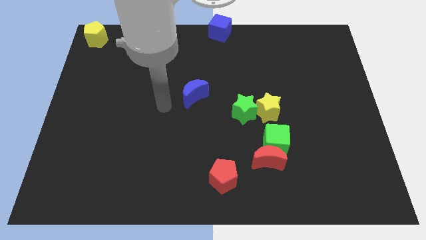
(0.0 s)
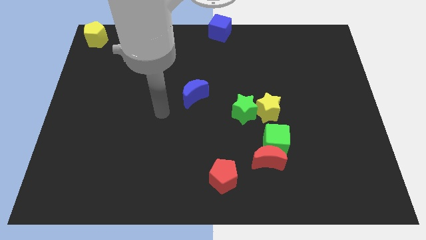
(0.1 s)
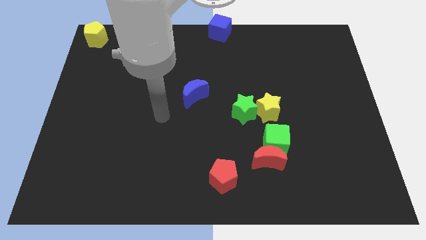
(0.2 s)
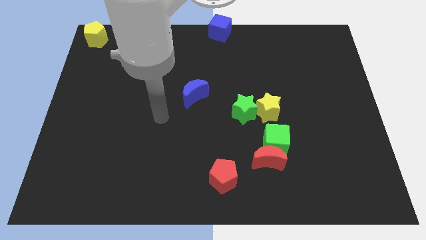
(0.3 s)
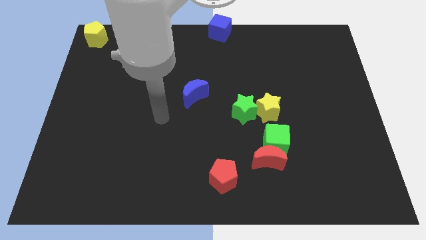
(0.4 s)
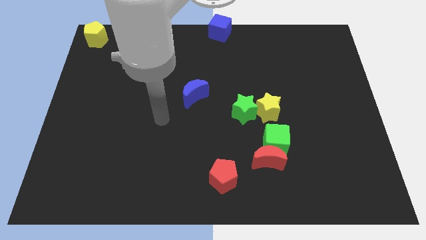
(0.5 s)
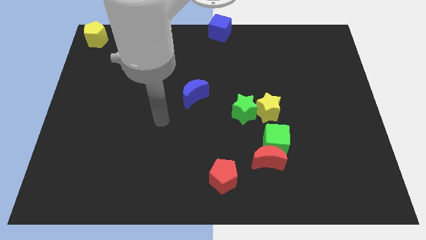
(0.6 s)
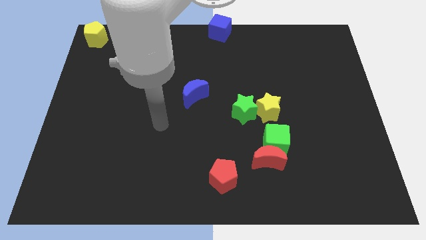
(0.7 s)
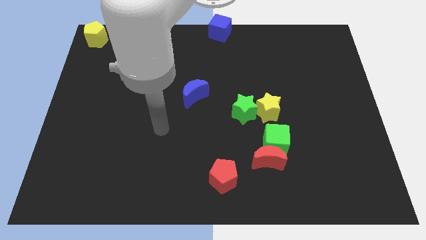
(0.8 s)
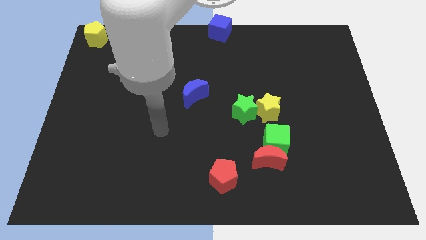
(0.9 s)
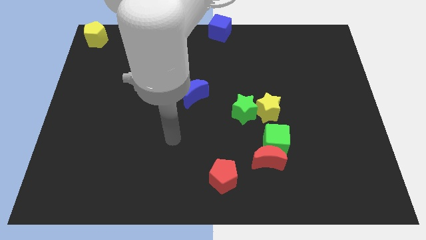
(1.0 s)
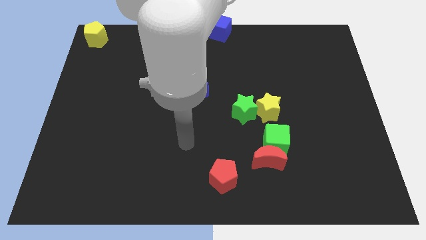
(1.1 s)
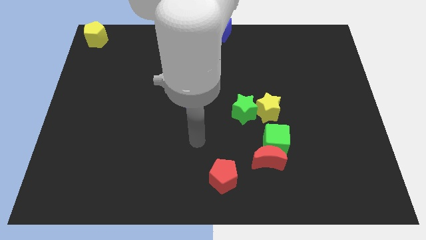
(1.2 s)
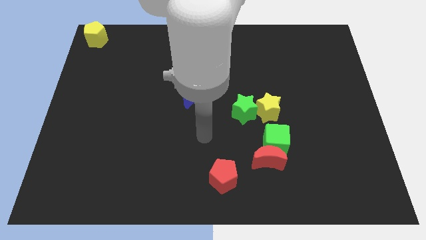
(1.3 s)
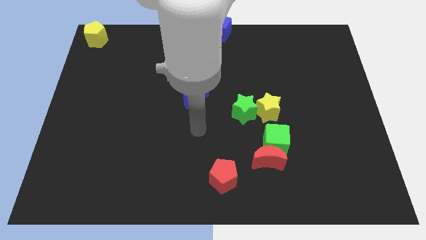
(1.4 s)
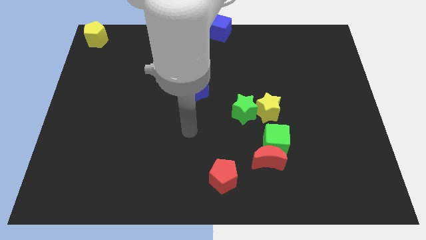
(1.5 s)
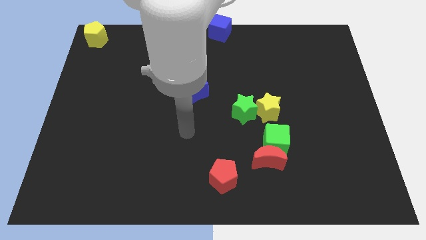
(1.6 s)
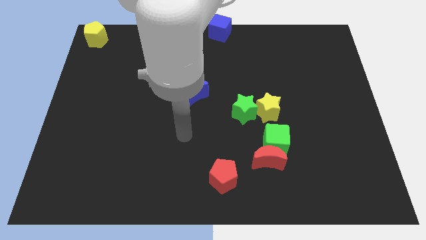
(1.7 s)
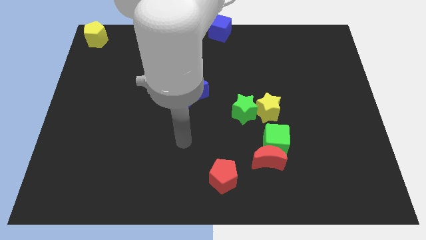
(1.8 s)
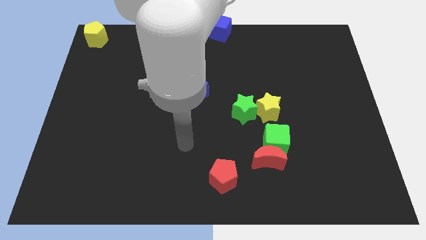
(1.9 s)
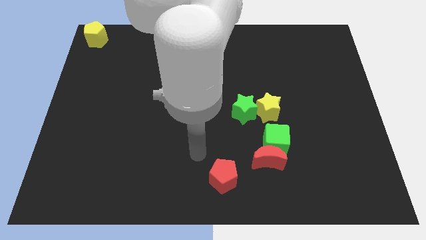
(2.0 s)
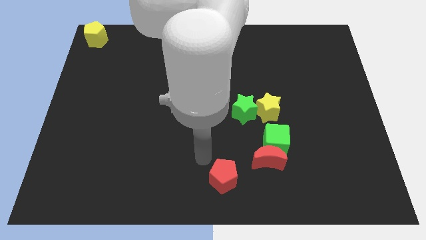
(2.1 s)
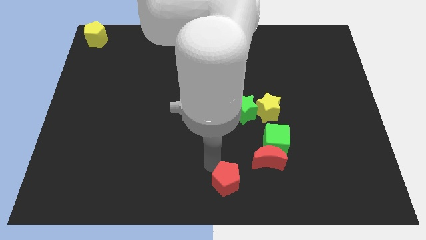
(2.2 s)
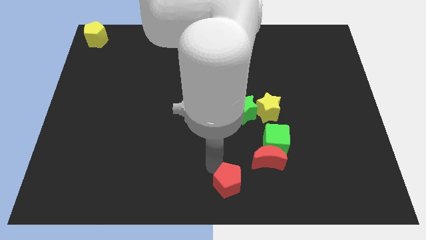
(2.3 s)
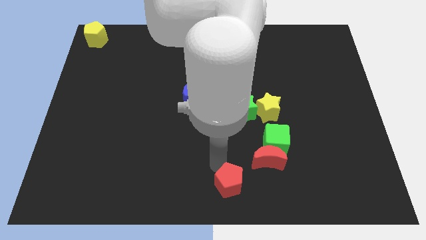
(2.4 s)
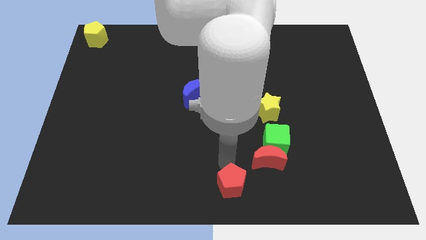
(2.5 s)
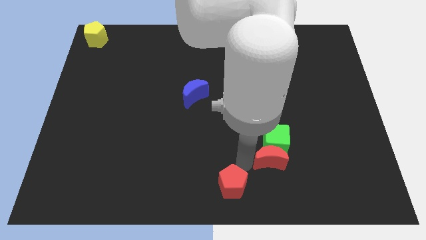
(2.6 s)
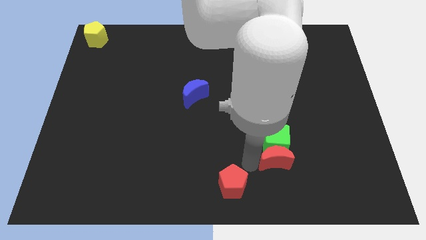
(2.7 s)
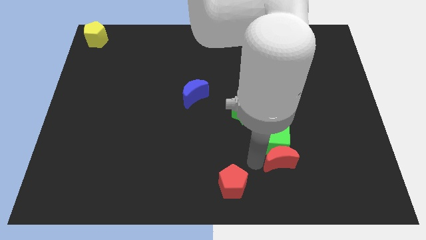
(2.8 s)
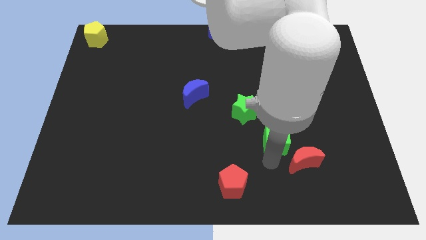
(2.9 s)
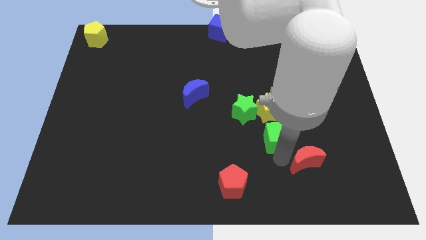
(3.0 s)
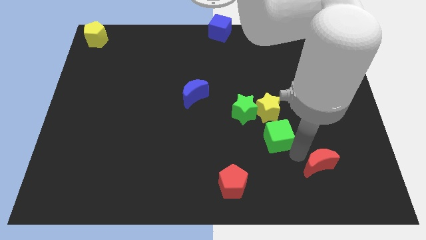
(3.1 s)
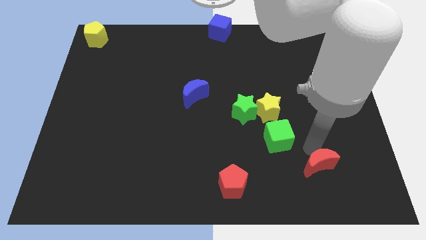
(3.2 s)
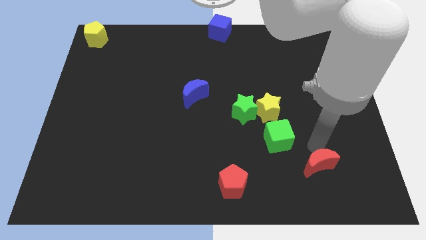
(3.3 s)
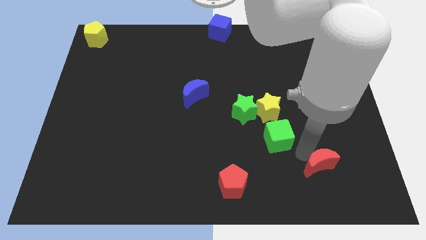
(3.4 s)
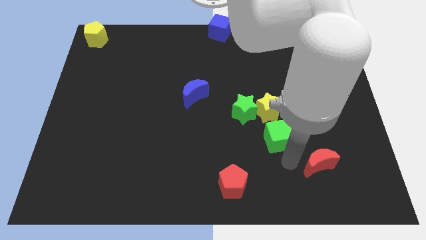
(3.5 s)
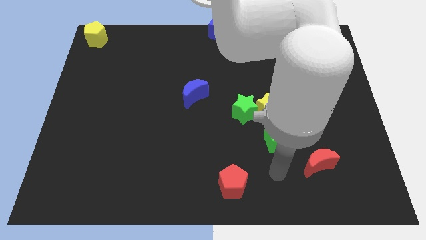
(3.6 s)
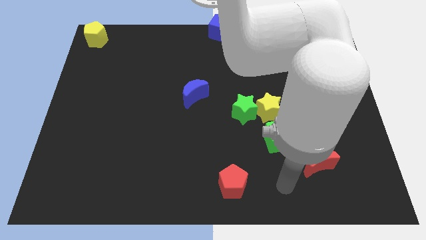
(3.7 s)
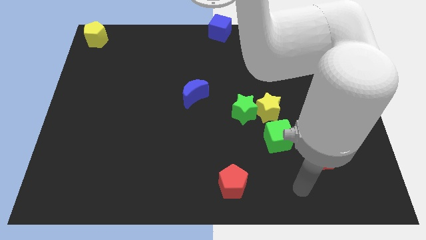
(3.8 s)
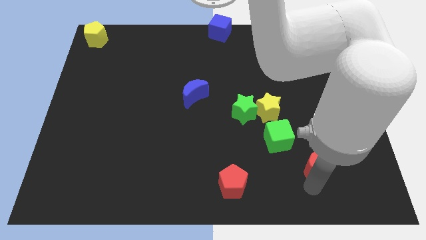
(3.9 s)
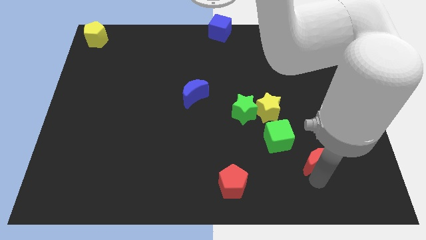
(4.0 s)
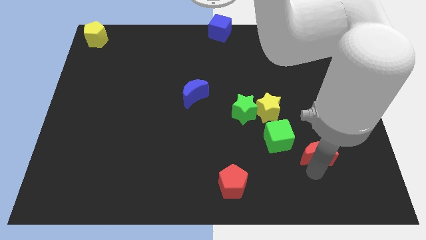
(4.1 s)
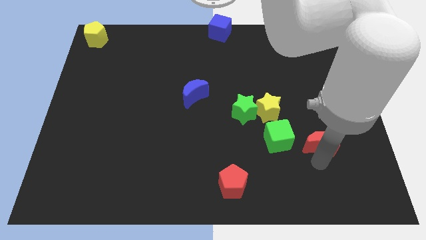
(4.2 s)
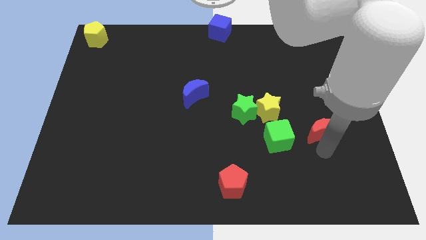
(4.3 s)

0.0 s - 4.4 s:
place the red crescent to the right of the green cube

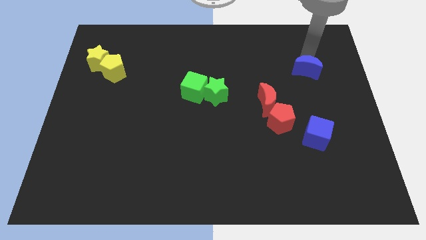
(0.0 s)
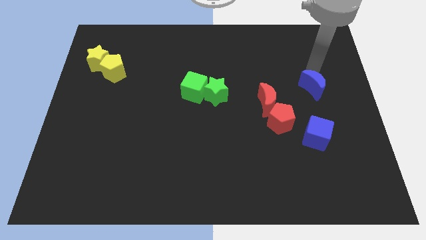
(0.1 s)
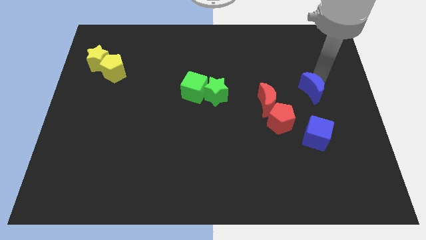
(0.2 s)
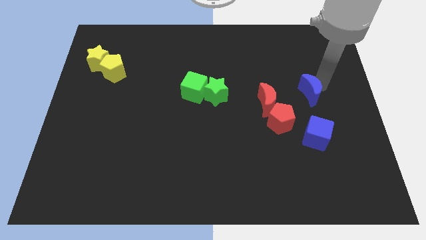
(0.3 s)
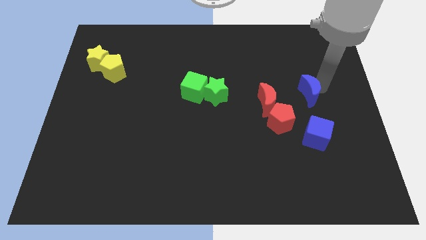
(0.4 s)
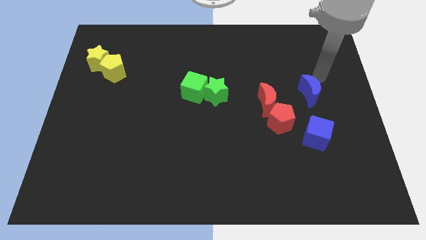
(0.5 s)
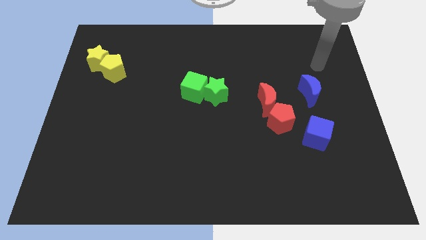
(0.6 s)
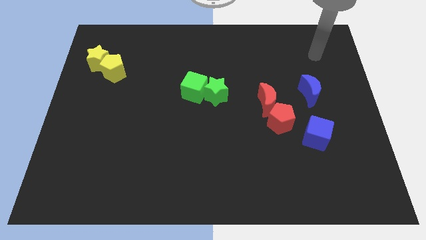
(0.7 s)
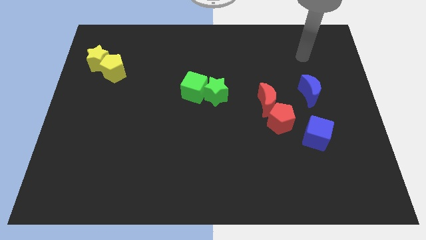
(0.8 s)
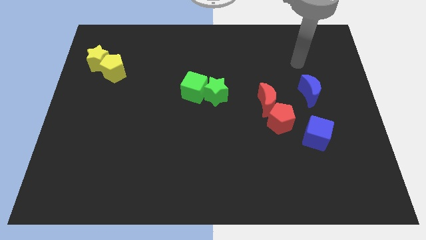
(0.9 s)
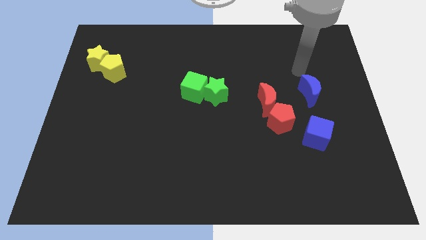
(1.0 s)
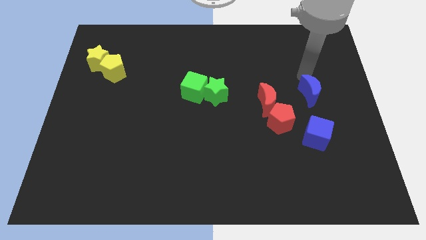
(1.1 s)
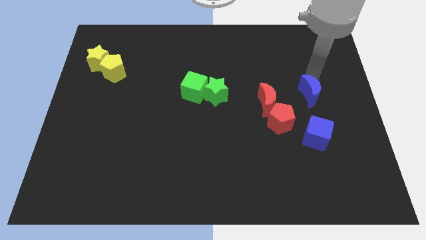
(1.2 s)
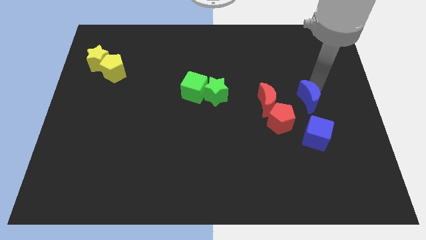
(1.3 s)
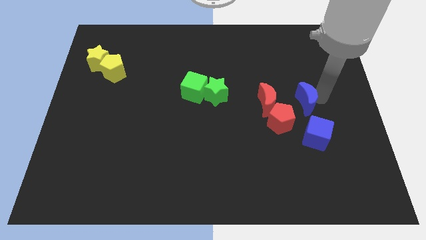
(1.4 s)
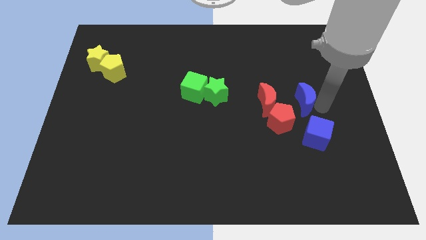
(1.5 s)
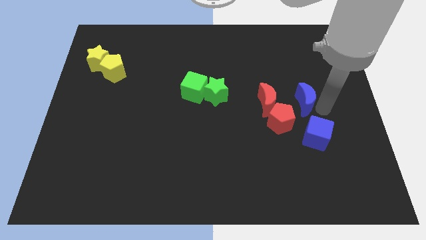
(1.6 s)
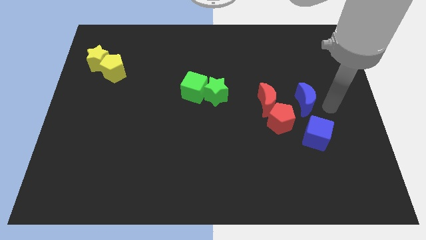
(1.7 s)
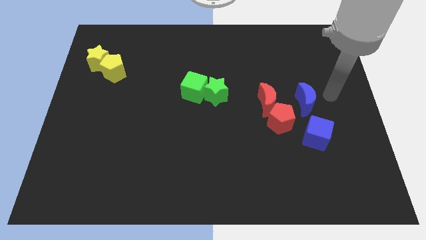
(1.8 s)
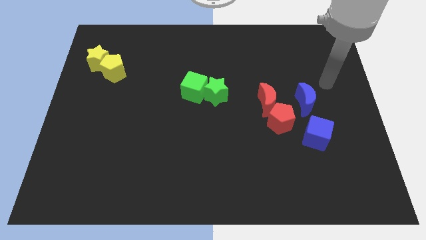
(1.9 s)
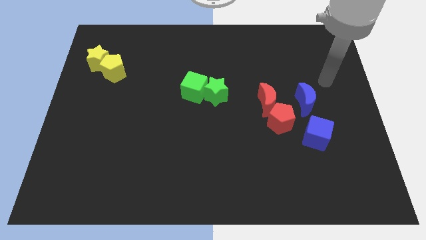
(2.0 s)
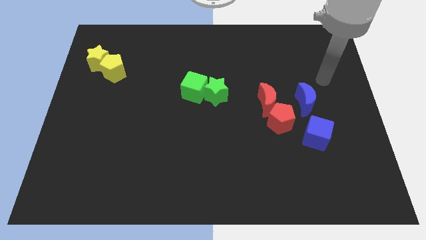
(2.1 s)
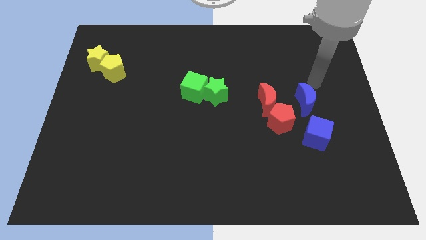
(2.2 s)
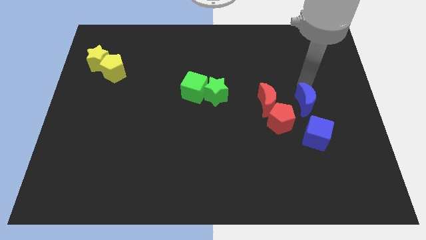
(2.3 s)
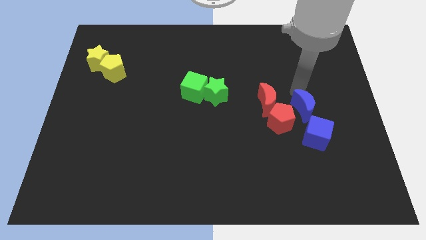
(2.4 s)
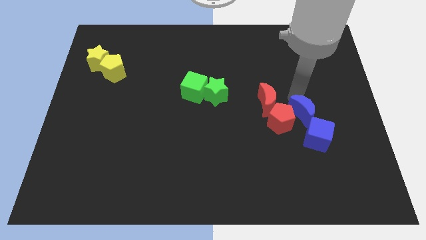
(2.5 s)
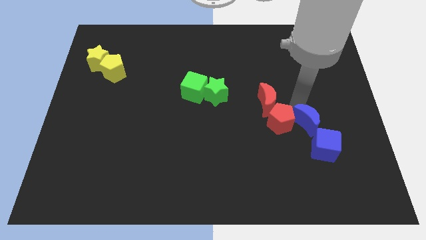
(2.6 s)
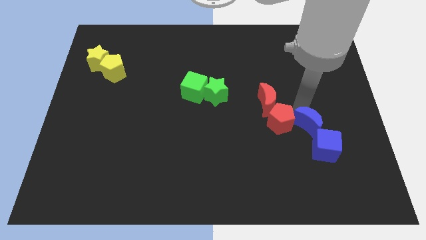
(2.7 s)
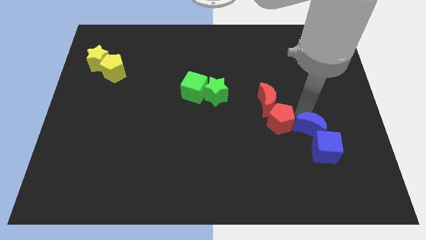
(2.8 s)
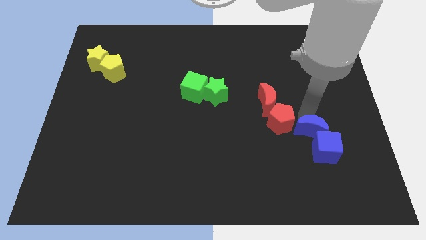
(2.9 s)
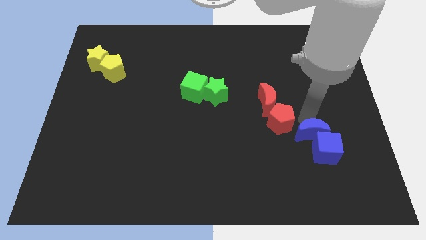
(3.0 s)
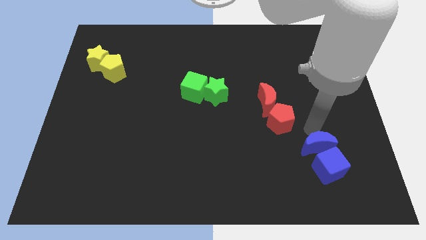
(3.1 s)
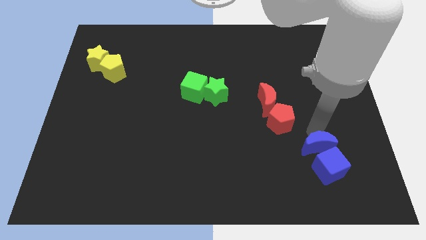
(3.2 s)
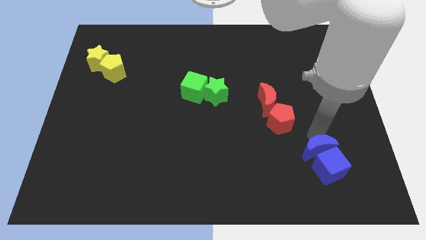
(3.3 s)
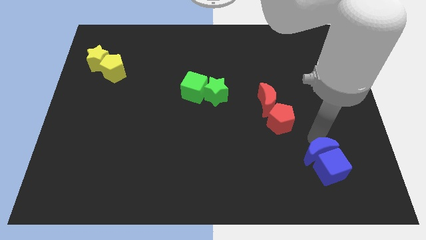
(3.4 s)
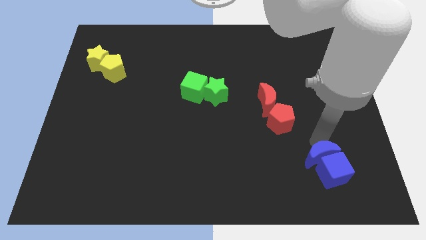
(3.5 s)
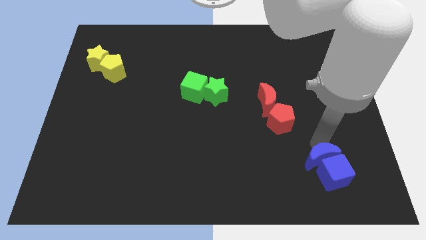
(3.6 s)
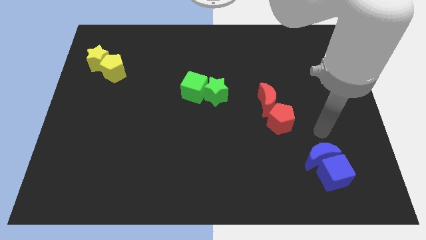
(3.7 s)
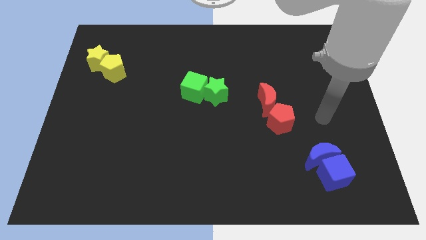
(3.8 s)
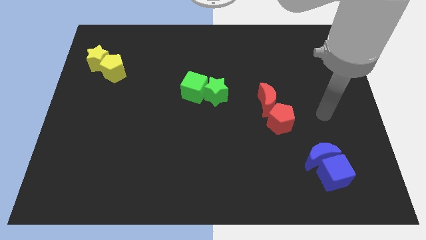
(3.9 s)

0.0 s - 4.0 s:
move the blue moon into blue cube diagonally

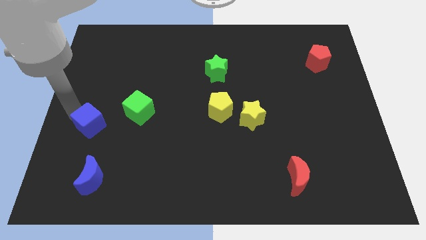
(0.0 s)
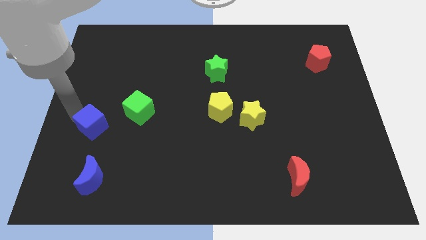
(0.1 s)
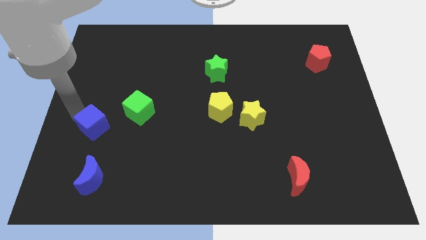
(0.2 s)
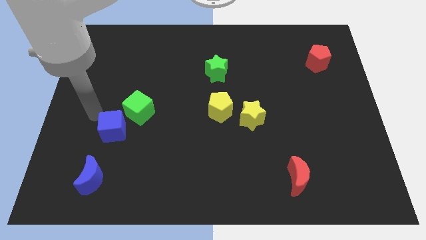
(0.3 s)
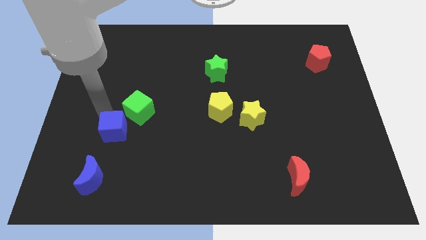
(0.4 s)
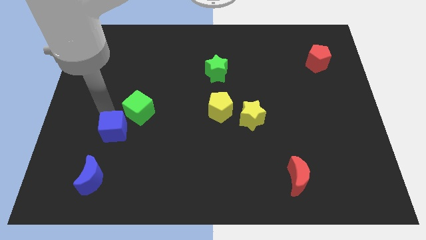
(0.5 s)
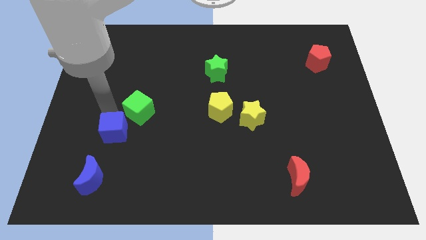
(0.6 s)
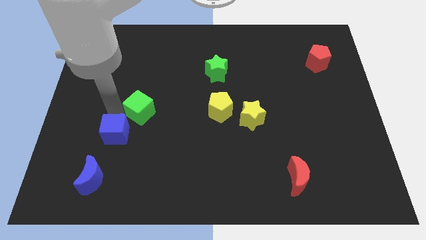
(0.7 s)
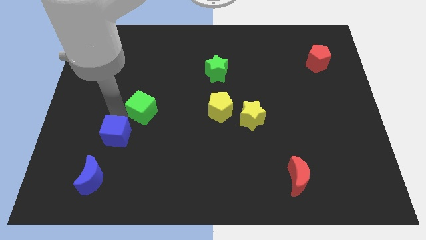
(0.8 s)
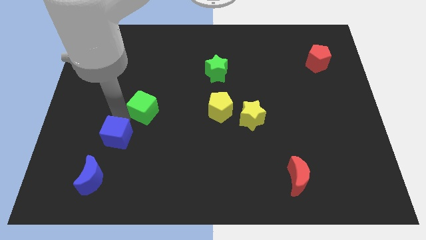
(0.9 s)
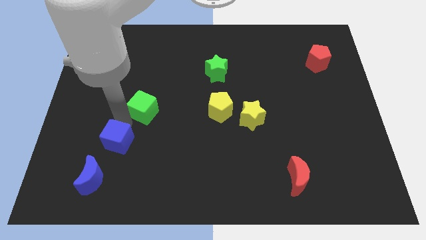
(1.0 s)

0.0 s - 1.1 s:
place the blue moon in between the green cube and blue moon
